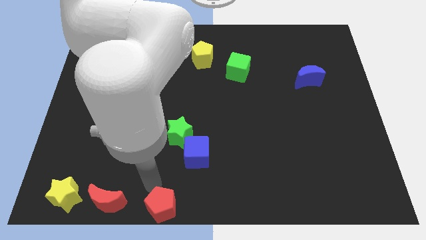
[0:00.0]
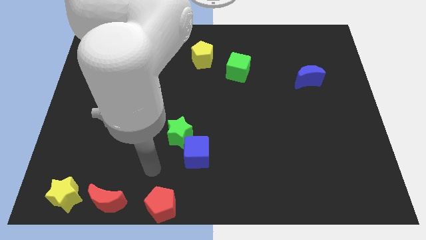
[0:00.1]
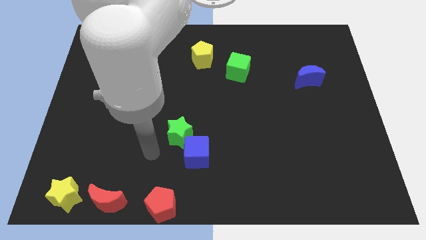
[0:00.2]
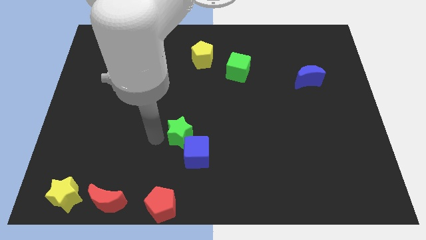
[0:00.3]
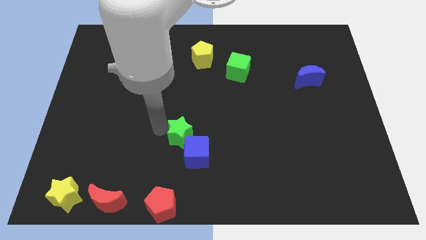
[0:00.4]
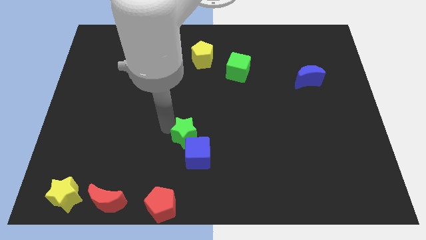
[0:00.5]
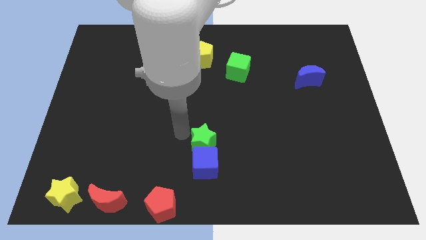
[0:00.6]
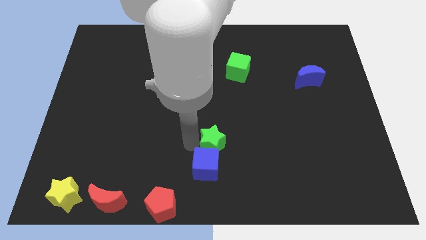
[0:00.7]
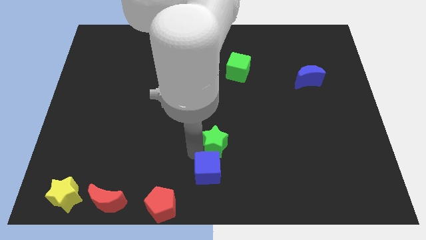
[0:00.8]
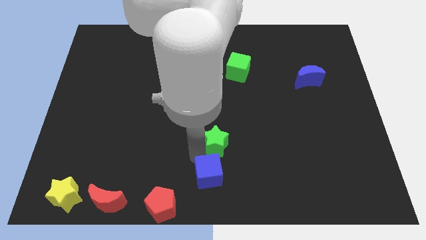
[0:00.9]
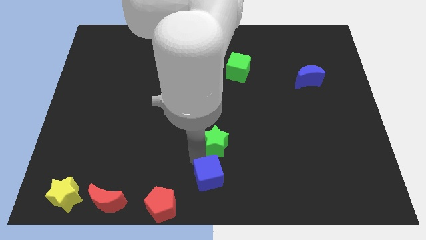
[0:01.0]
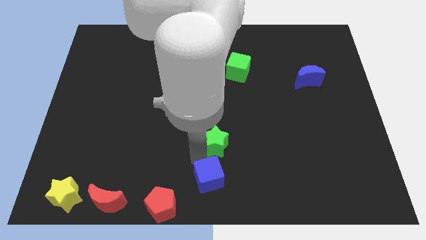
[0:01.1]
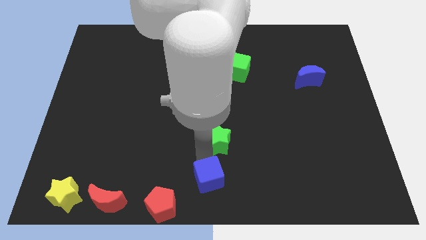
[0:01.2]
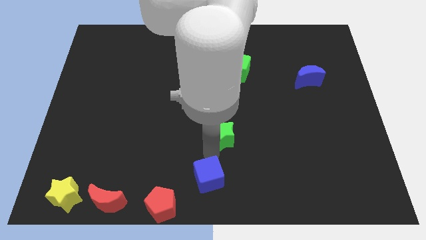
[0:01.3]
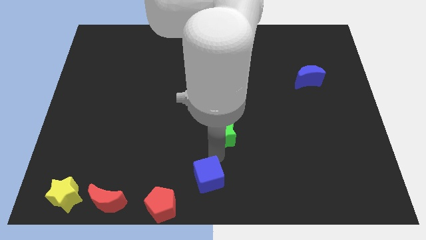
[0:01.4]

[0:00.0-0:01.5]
separate the green star and the blue moon

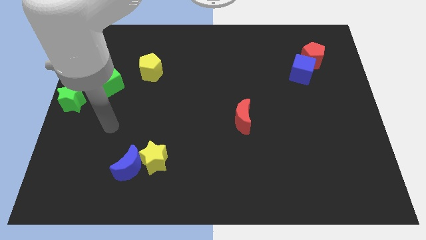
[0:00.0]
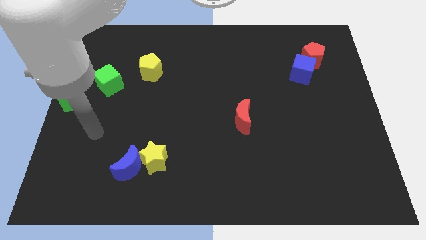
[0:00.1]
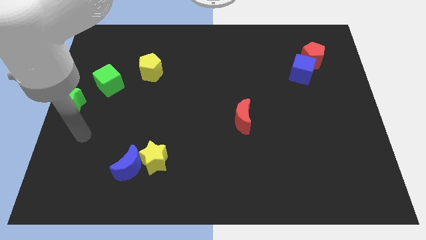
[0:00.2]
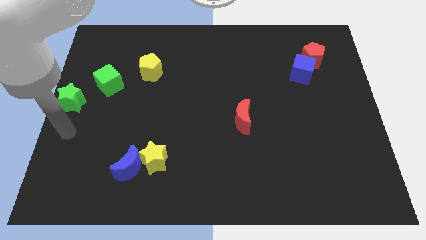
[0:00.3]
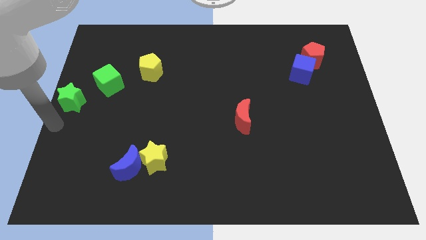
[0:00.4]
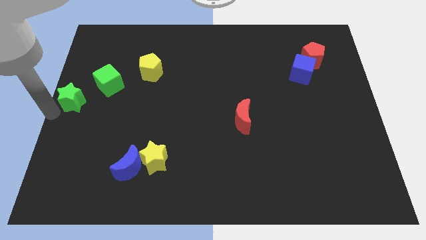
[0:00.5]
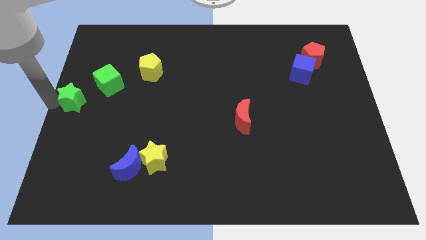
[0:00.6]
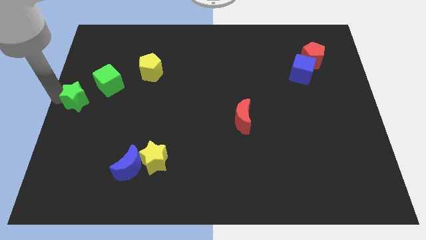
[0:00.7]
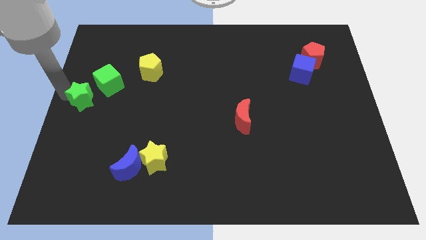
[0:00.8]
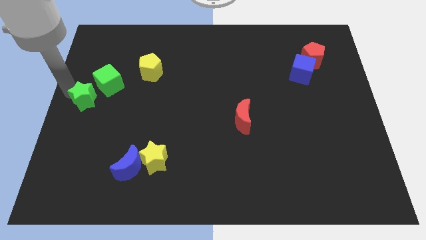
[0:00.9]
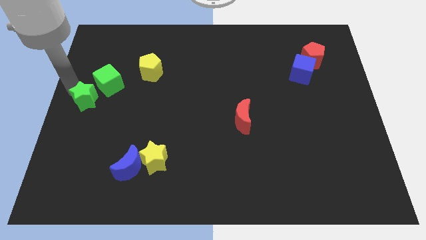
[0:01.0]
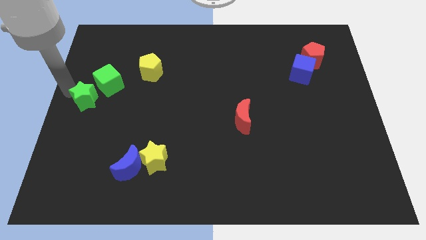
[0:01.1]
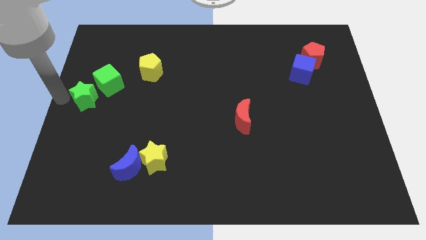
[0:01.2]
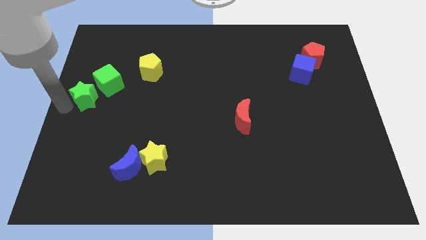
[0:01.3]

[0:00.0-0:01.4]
push the green star close to the green cube

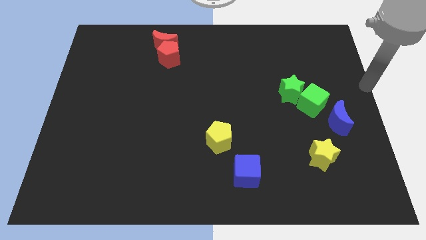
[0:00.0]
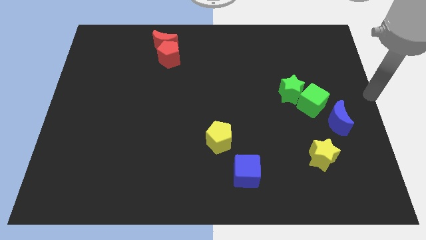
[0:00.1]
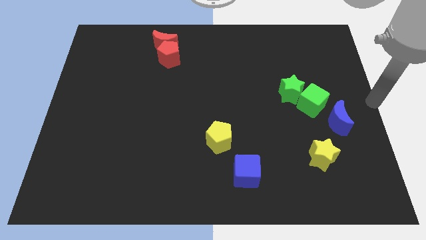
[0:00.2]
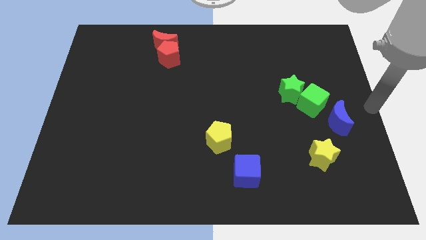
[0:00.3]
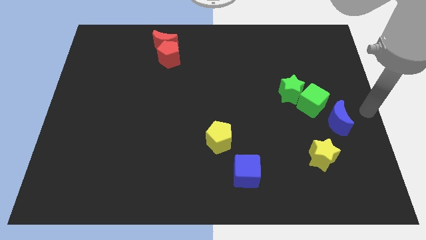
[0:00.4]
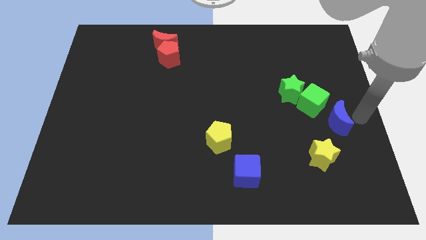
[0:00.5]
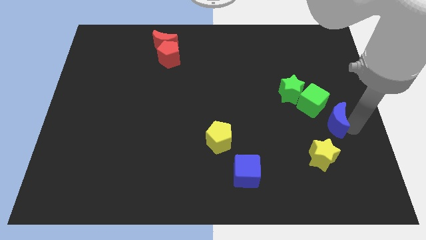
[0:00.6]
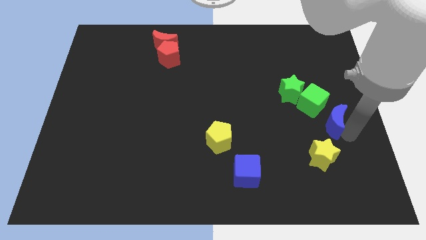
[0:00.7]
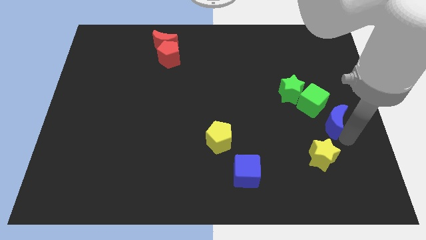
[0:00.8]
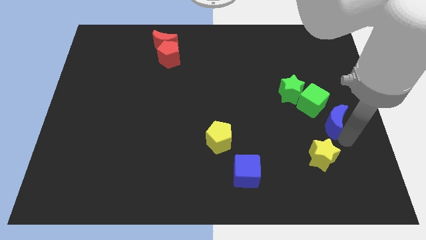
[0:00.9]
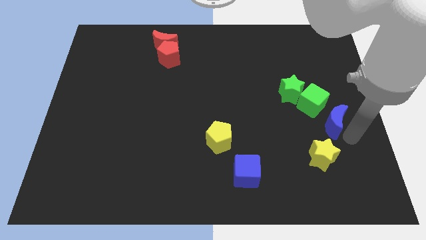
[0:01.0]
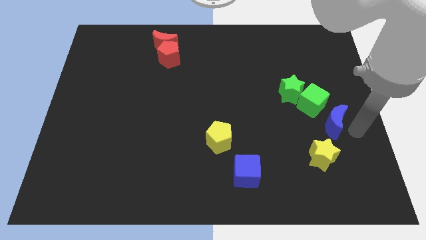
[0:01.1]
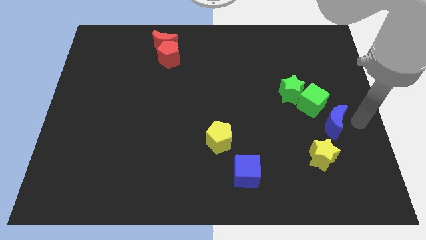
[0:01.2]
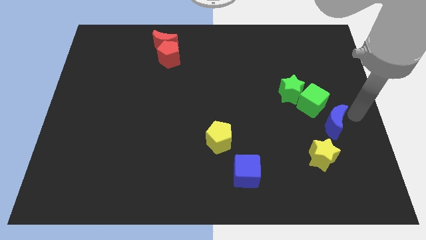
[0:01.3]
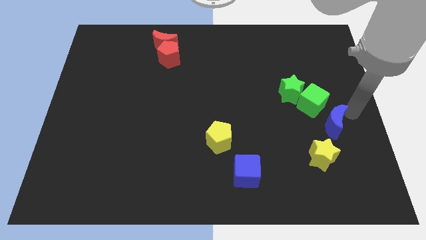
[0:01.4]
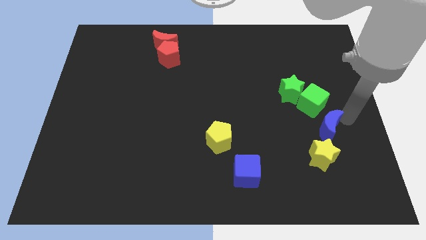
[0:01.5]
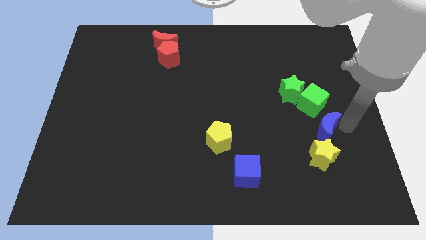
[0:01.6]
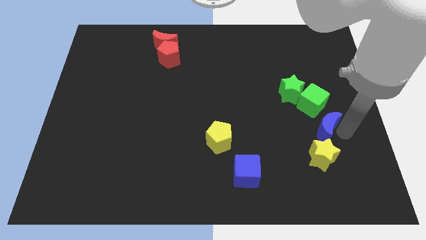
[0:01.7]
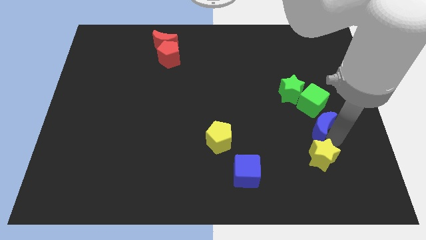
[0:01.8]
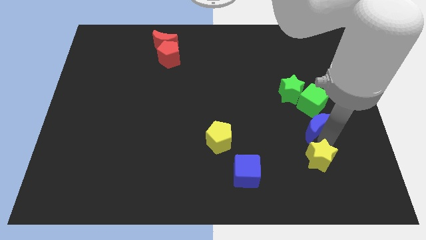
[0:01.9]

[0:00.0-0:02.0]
place your arm in between the blue moon and yellow star

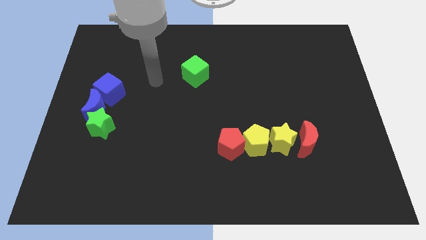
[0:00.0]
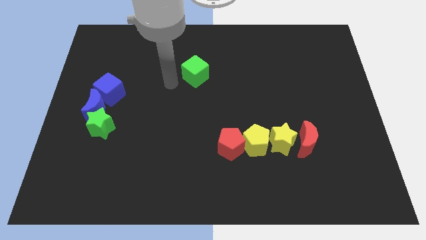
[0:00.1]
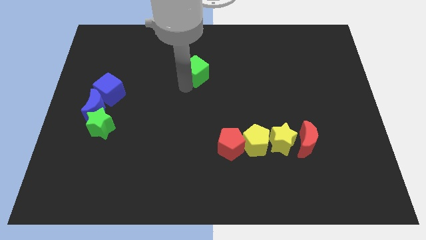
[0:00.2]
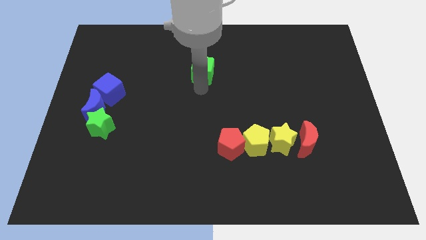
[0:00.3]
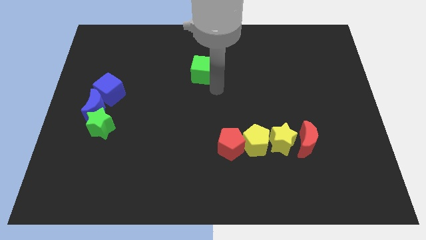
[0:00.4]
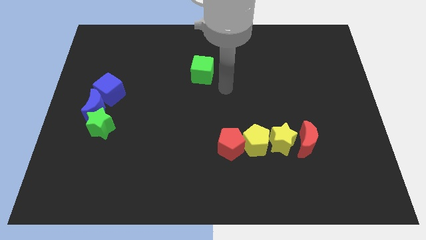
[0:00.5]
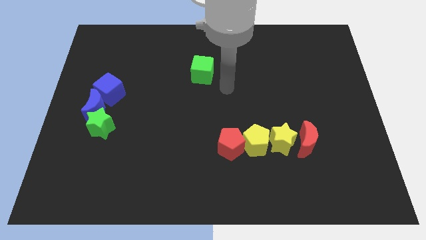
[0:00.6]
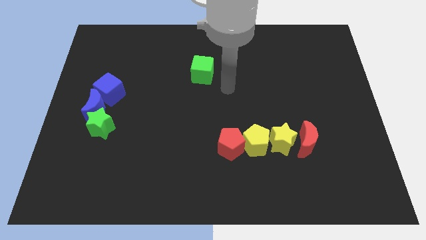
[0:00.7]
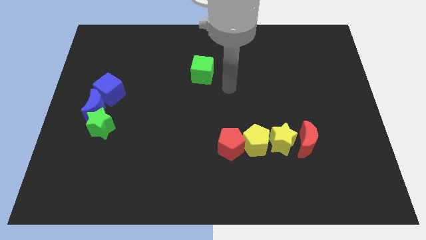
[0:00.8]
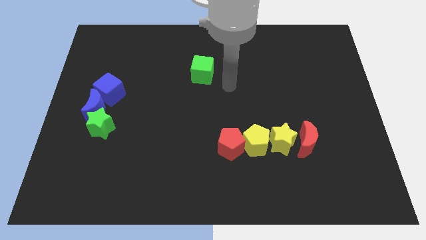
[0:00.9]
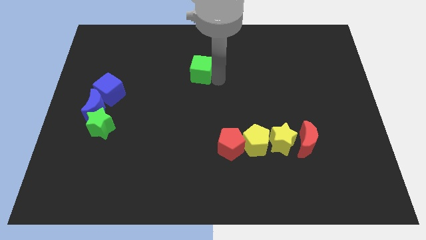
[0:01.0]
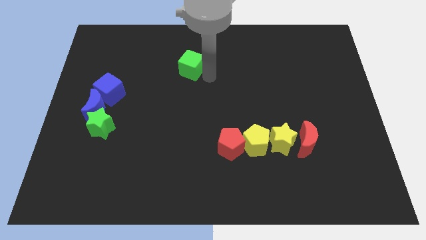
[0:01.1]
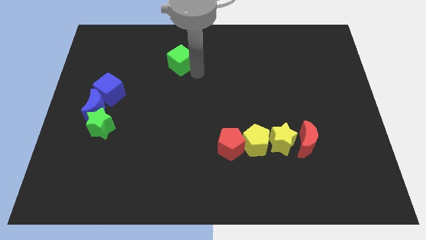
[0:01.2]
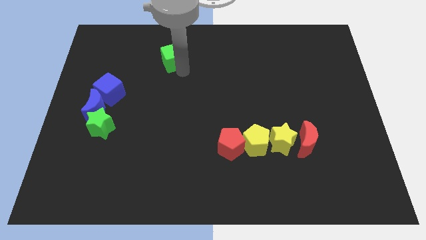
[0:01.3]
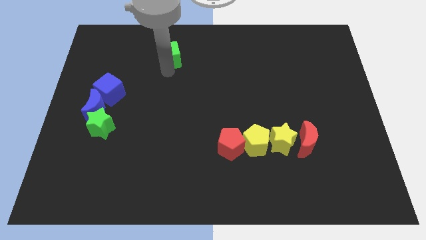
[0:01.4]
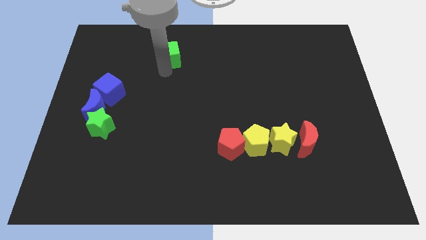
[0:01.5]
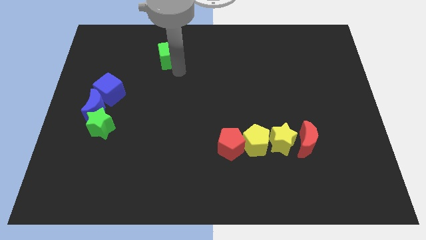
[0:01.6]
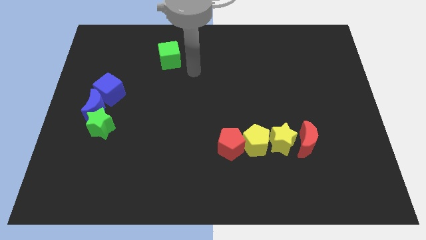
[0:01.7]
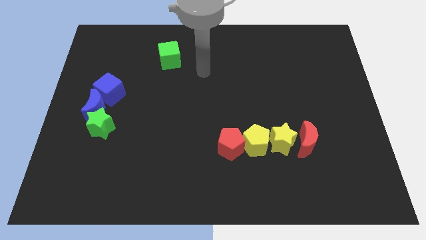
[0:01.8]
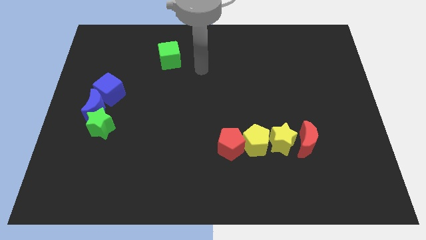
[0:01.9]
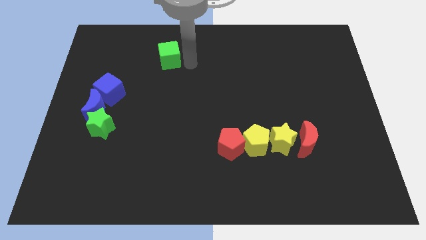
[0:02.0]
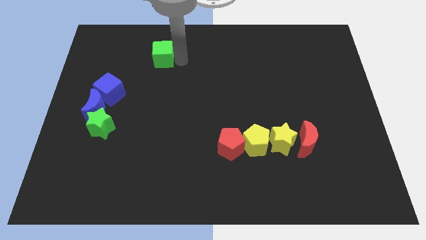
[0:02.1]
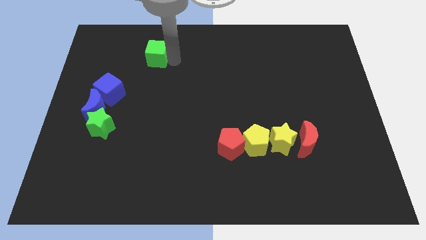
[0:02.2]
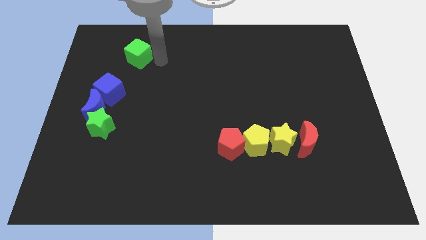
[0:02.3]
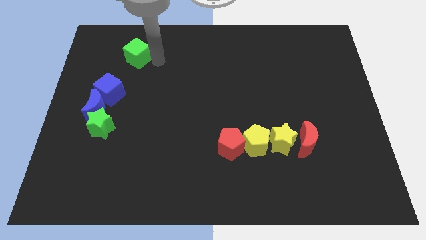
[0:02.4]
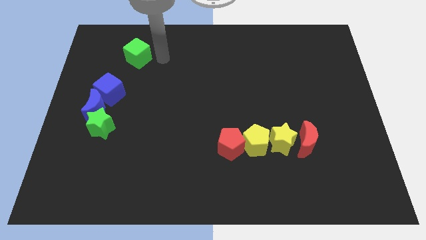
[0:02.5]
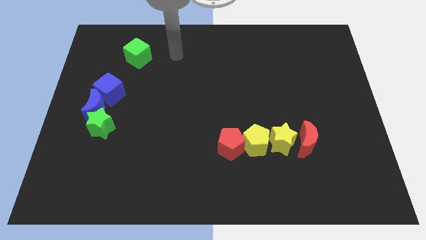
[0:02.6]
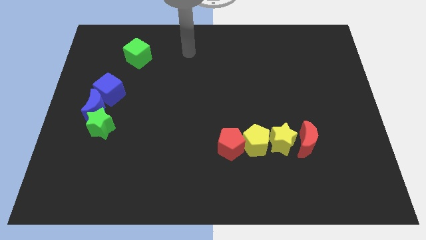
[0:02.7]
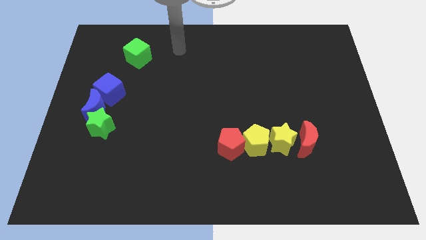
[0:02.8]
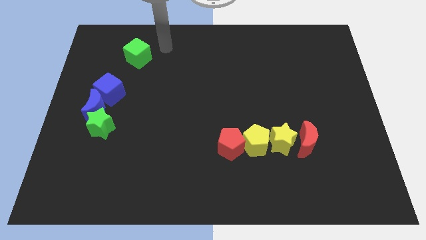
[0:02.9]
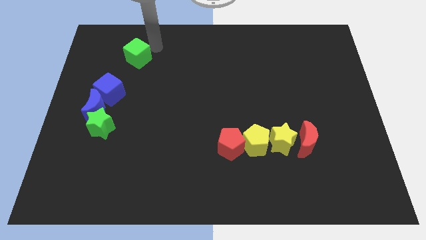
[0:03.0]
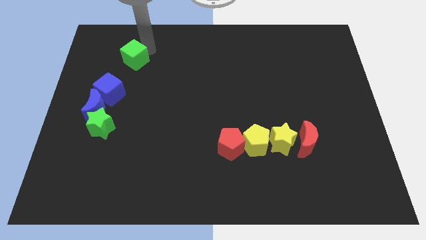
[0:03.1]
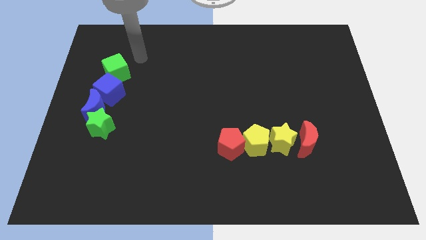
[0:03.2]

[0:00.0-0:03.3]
place green cube above blue cube

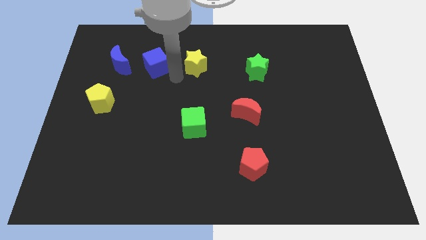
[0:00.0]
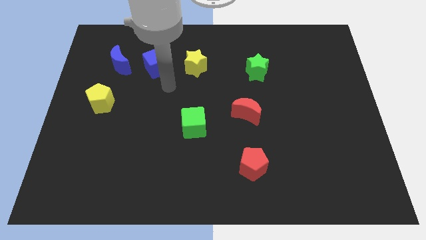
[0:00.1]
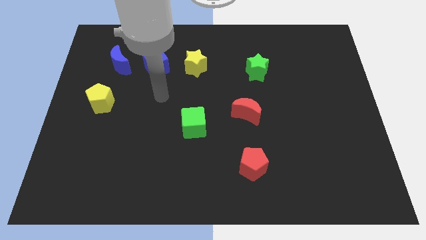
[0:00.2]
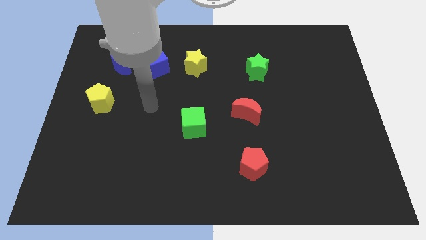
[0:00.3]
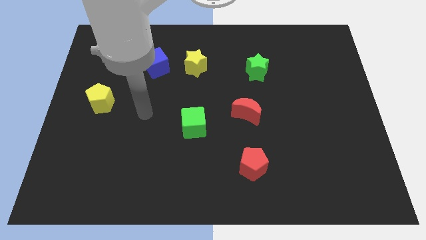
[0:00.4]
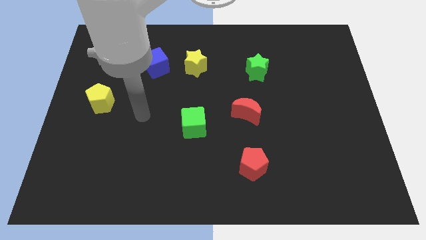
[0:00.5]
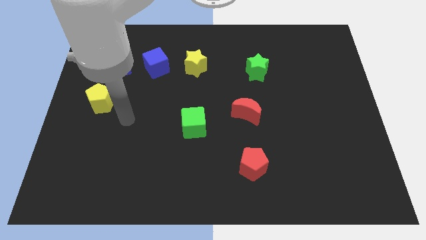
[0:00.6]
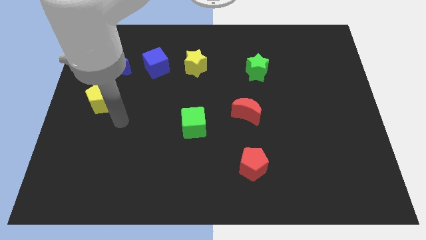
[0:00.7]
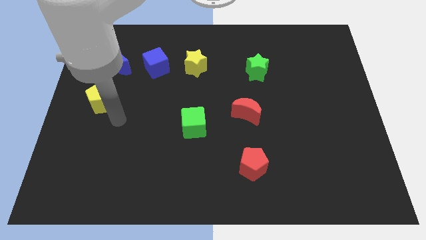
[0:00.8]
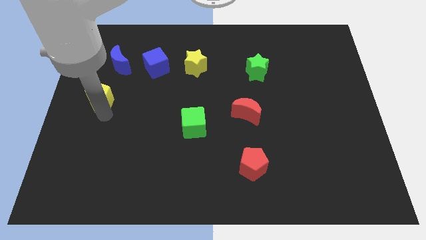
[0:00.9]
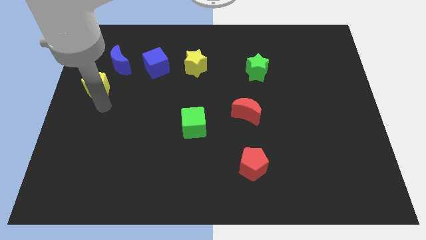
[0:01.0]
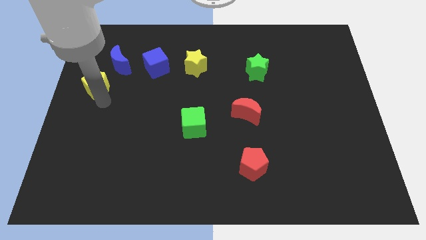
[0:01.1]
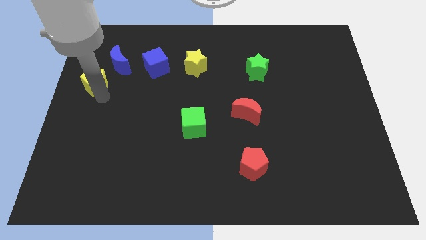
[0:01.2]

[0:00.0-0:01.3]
tap the yellow pentagon
